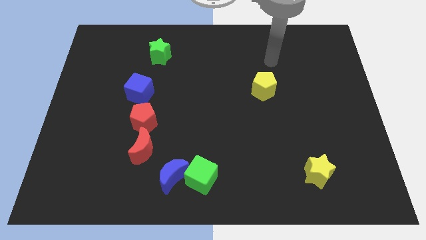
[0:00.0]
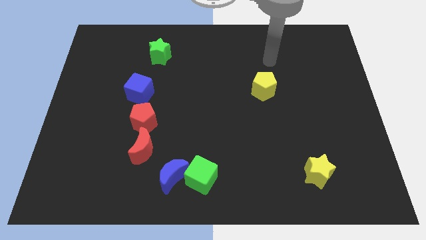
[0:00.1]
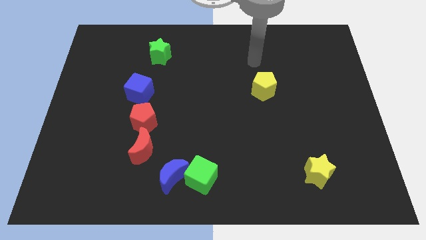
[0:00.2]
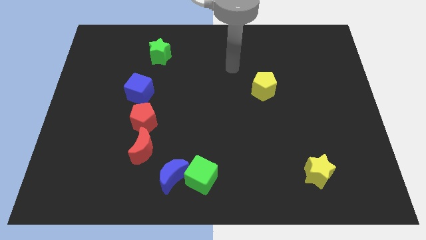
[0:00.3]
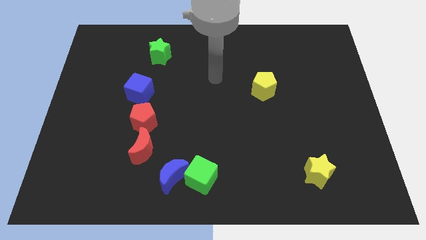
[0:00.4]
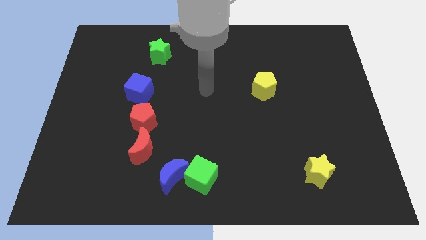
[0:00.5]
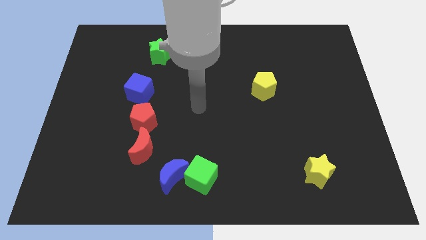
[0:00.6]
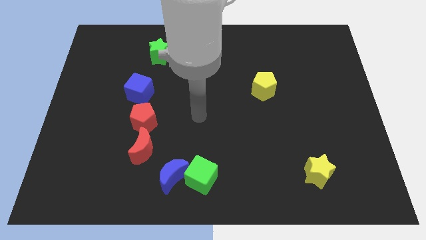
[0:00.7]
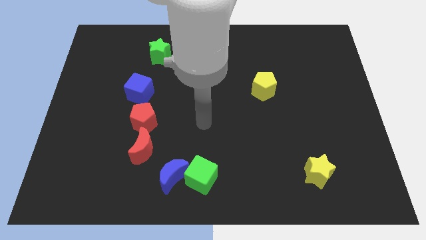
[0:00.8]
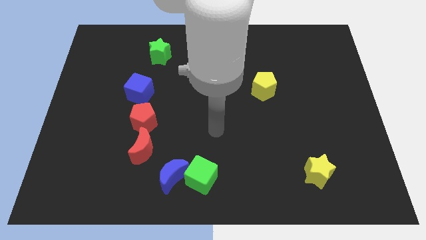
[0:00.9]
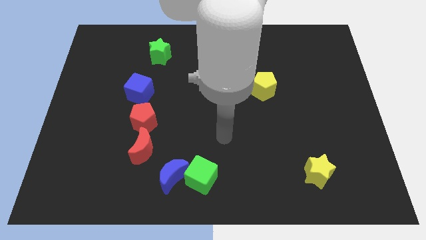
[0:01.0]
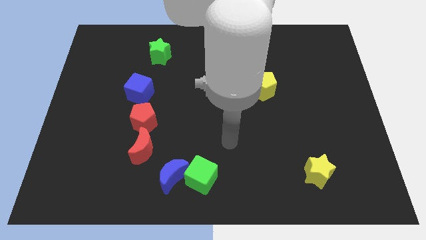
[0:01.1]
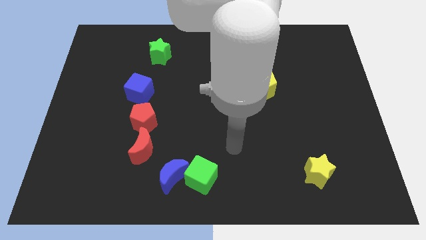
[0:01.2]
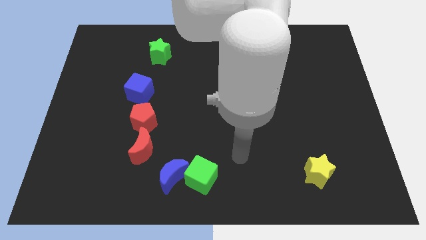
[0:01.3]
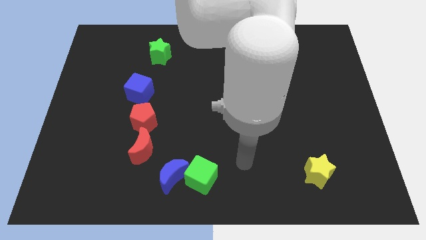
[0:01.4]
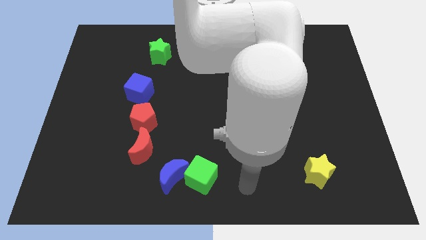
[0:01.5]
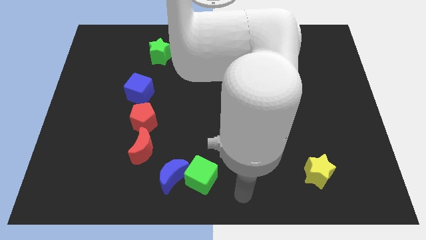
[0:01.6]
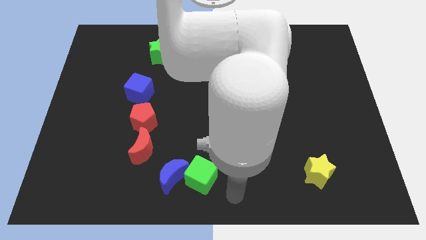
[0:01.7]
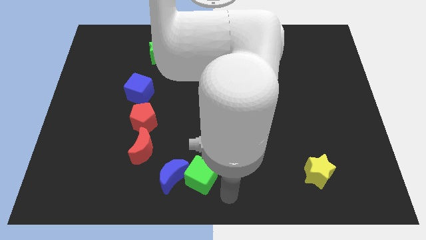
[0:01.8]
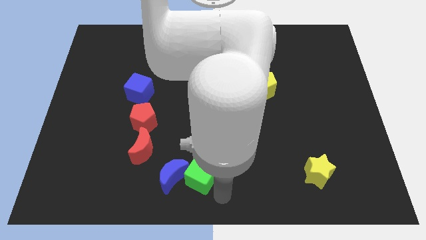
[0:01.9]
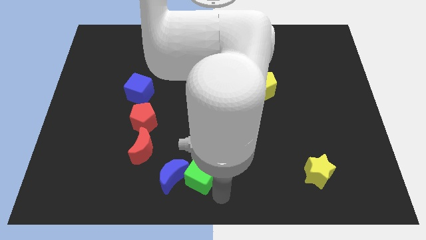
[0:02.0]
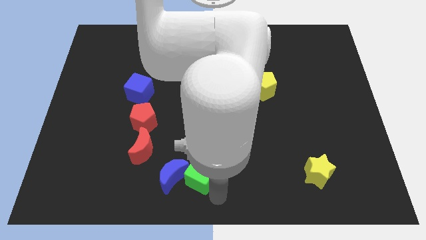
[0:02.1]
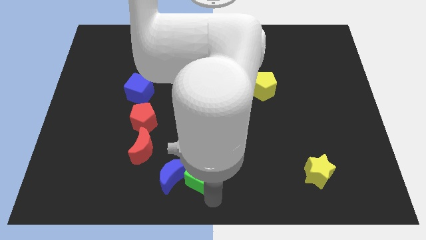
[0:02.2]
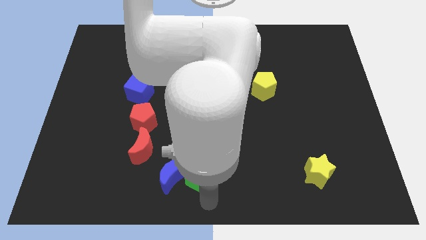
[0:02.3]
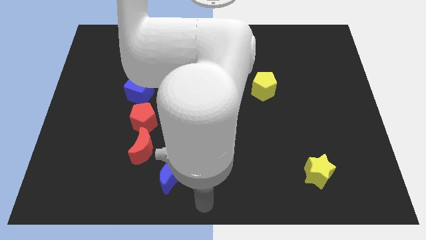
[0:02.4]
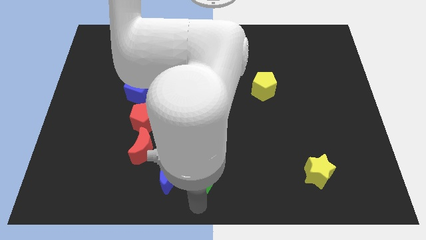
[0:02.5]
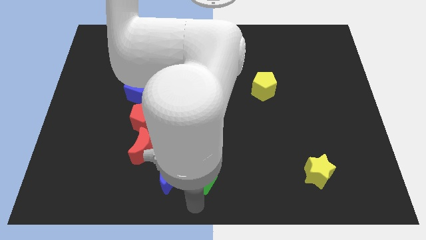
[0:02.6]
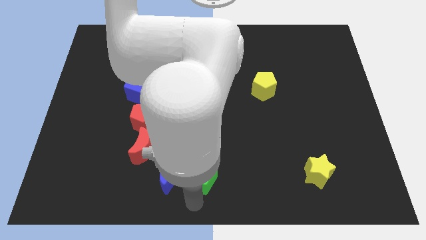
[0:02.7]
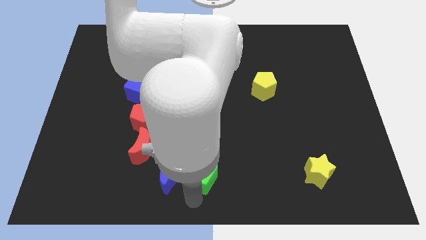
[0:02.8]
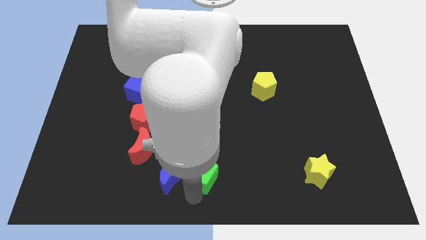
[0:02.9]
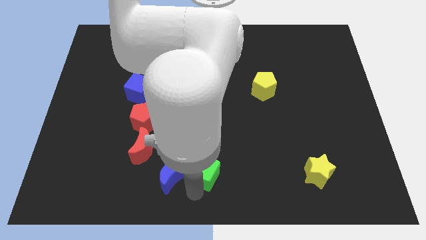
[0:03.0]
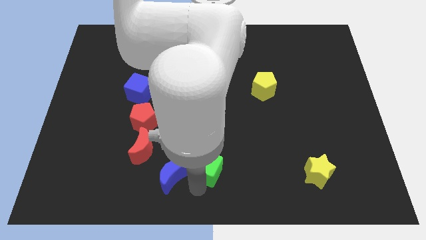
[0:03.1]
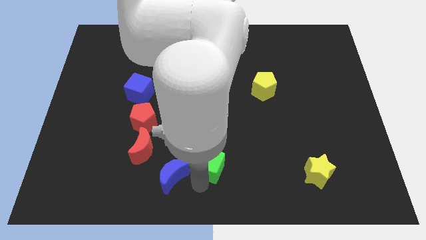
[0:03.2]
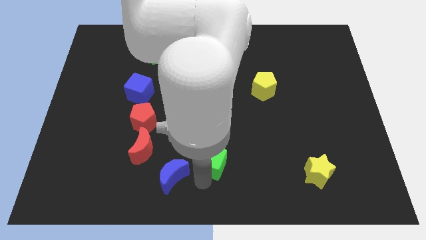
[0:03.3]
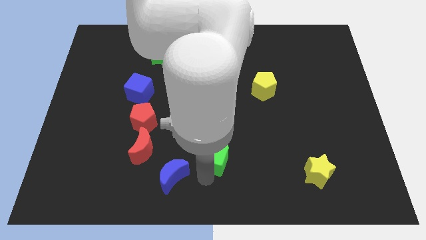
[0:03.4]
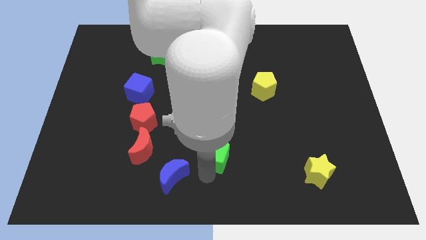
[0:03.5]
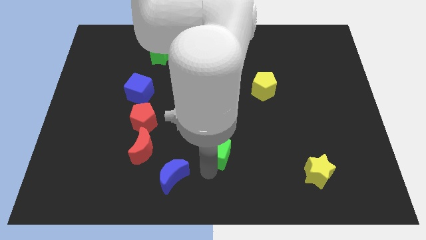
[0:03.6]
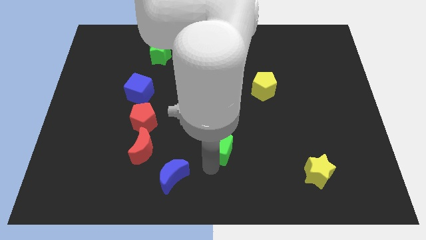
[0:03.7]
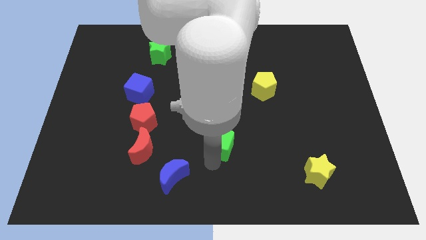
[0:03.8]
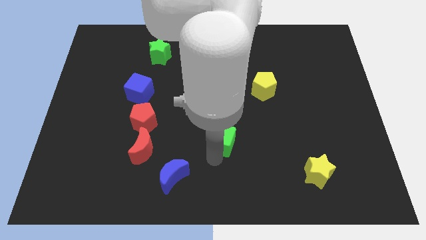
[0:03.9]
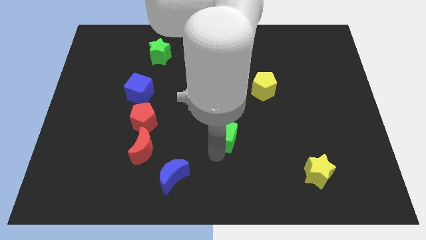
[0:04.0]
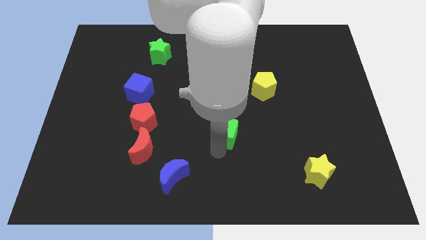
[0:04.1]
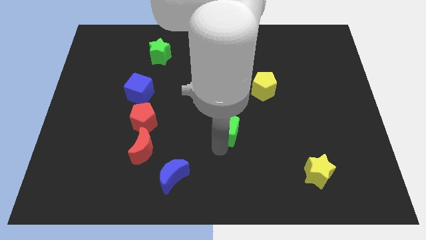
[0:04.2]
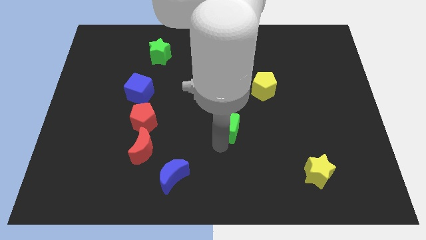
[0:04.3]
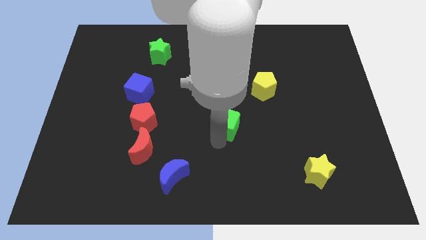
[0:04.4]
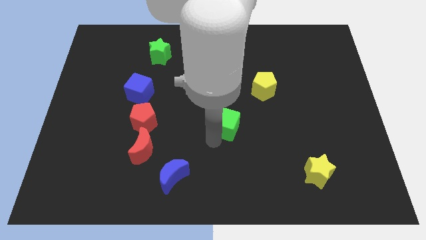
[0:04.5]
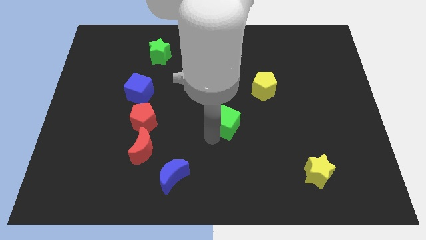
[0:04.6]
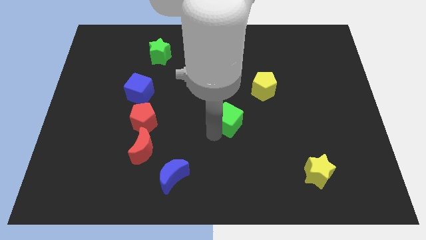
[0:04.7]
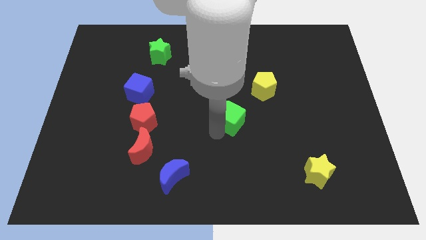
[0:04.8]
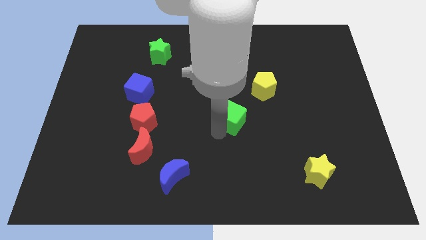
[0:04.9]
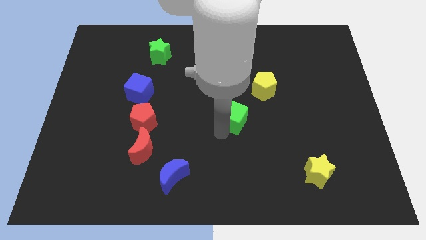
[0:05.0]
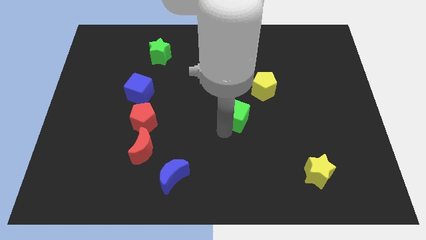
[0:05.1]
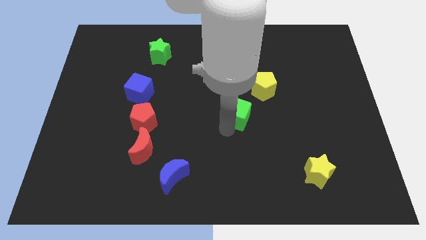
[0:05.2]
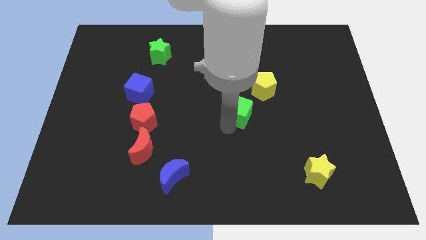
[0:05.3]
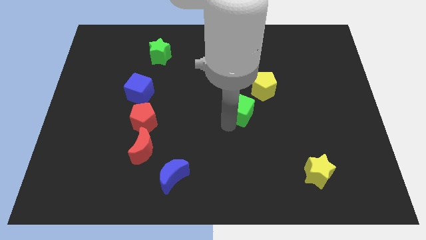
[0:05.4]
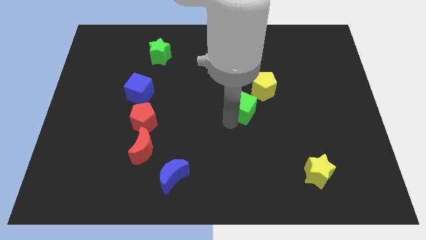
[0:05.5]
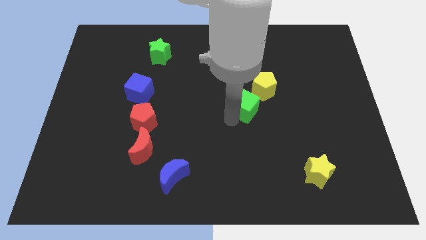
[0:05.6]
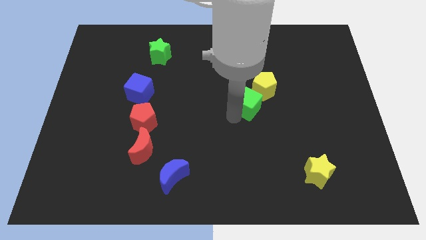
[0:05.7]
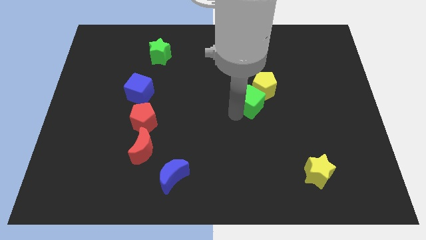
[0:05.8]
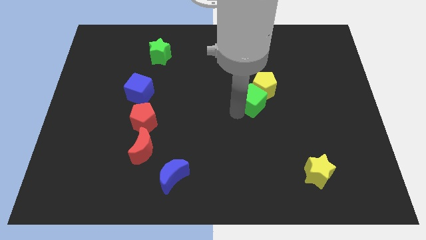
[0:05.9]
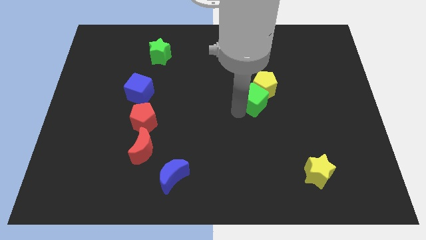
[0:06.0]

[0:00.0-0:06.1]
put the green cube towards the yellow pentagon

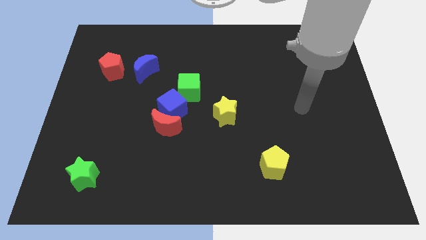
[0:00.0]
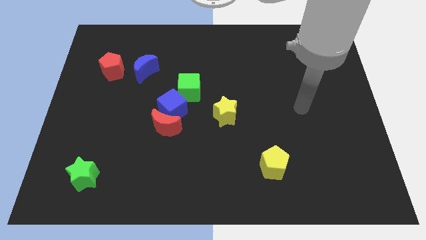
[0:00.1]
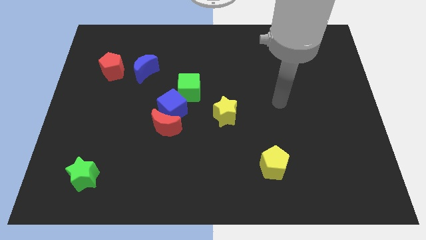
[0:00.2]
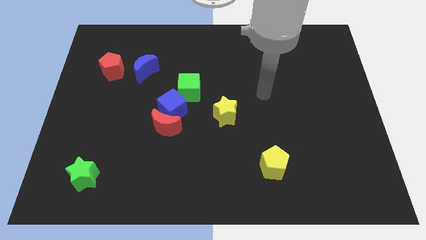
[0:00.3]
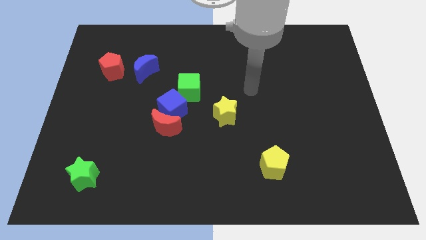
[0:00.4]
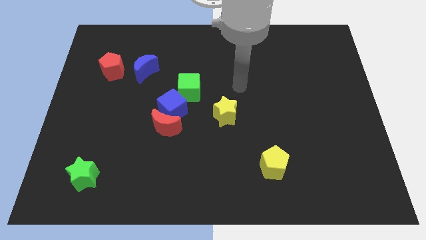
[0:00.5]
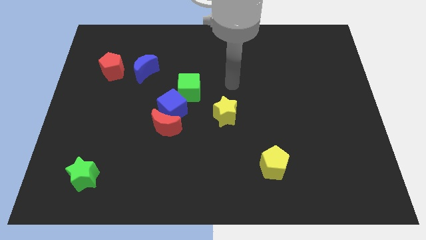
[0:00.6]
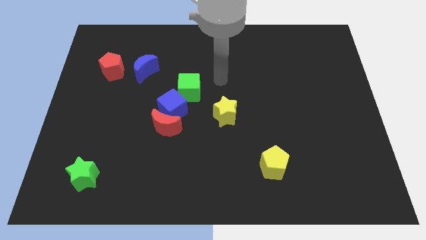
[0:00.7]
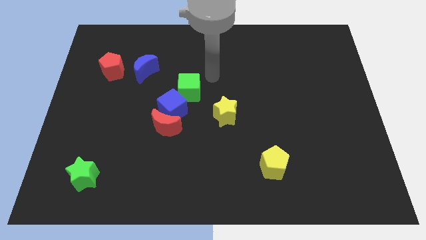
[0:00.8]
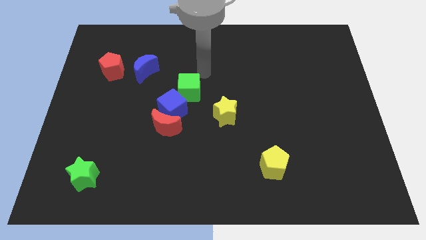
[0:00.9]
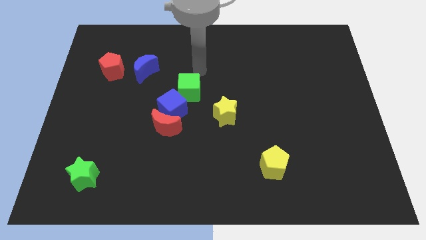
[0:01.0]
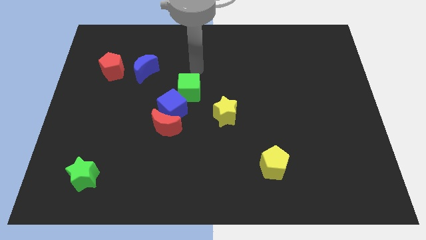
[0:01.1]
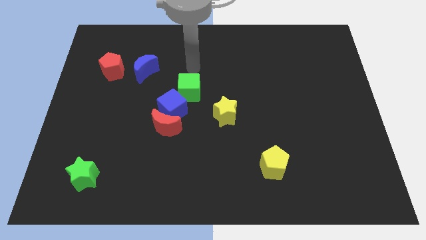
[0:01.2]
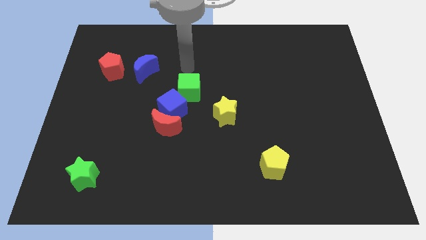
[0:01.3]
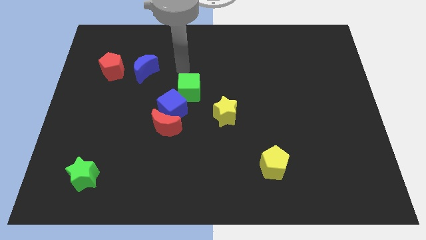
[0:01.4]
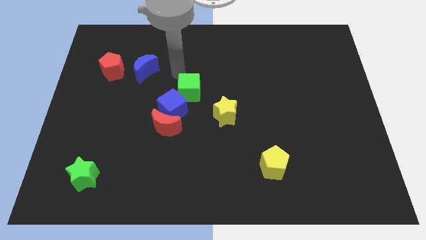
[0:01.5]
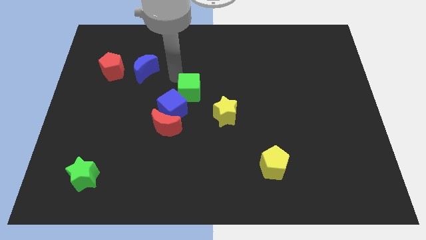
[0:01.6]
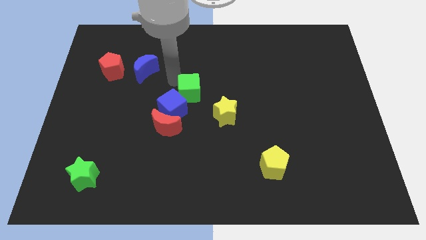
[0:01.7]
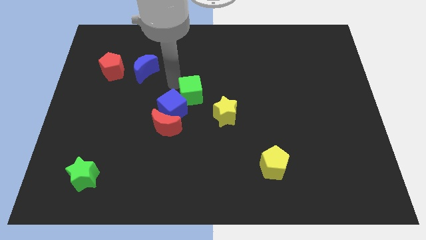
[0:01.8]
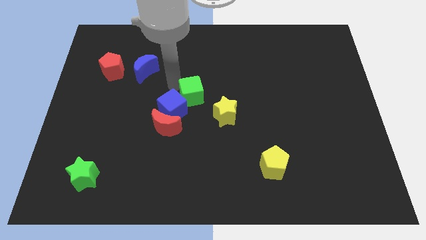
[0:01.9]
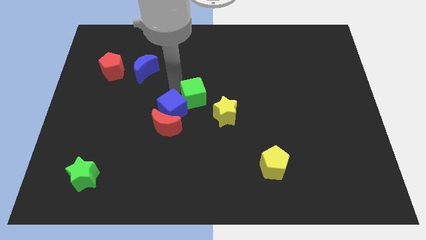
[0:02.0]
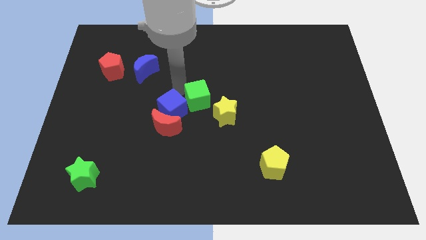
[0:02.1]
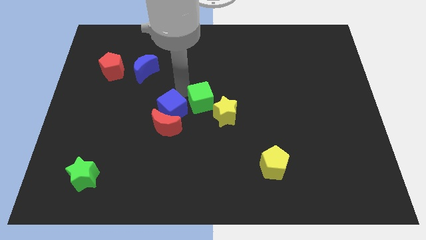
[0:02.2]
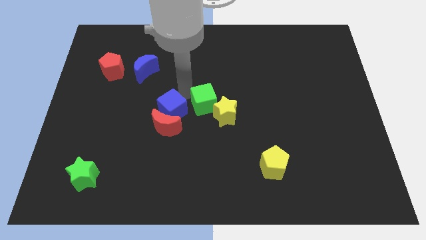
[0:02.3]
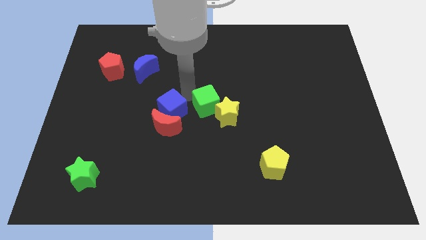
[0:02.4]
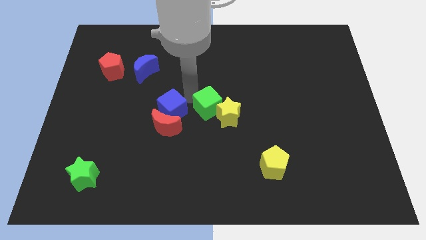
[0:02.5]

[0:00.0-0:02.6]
put the green cube next to the yellow star
